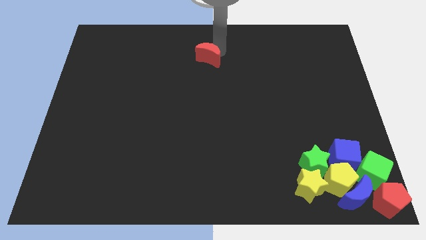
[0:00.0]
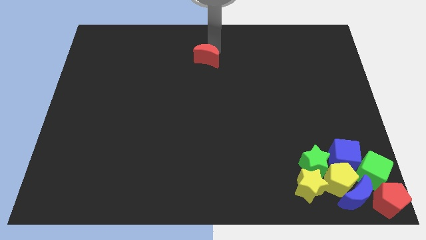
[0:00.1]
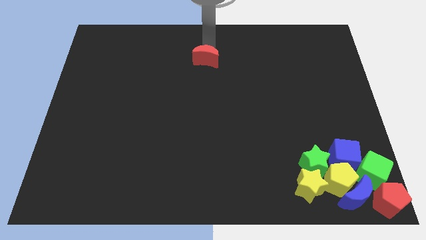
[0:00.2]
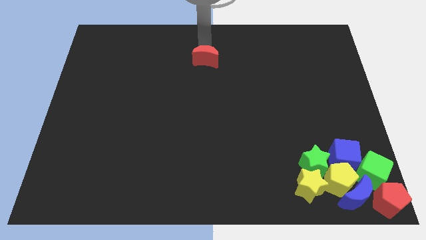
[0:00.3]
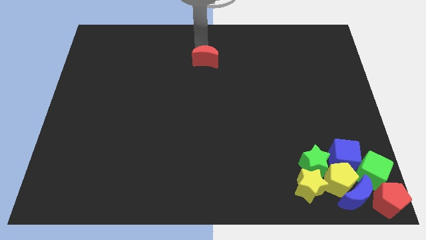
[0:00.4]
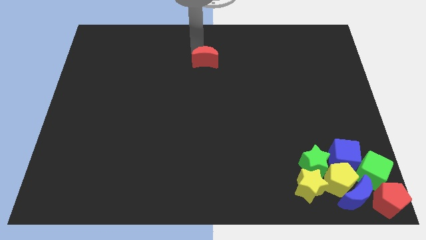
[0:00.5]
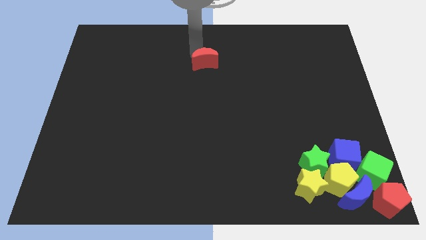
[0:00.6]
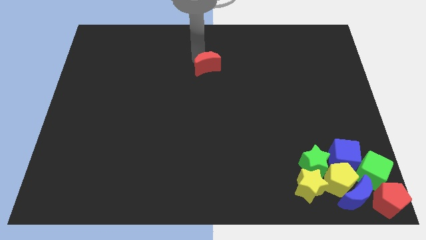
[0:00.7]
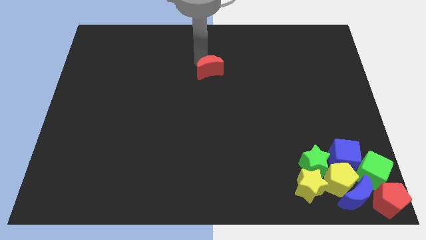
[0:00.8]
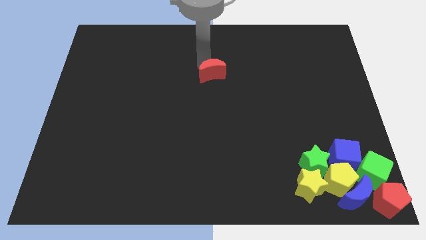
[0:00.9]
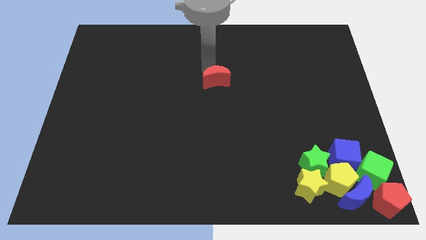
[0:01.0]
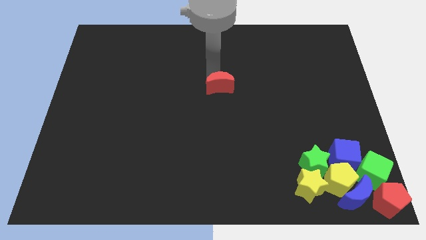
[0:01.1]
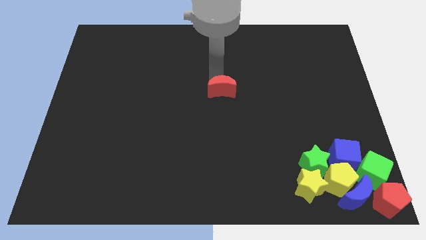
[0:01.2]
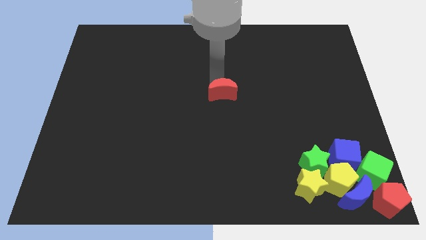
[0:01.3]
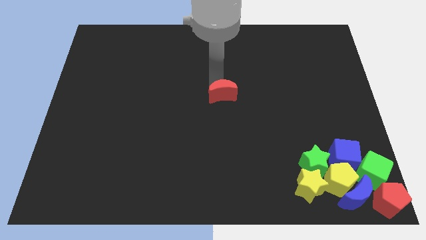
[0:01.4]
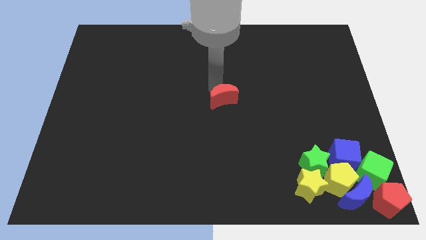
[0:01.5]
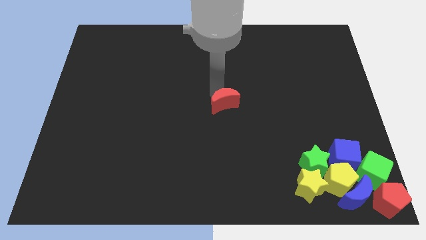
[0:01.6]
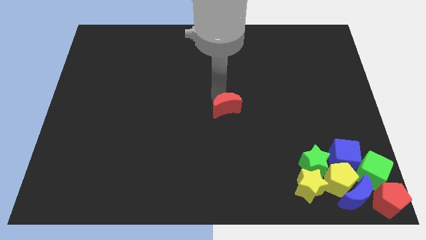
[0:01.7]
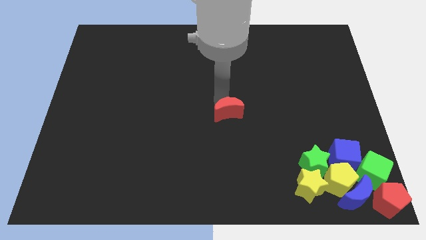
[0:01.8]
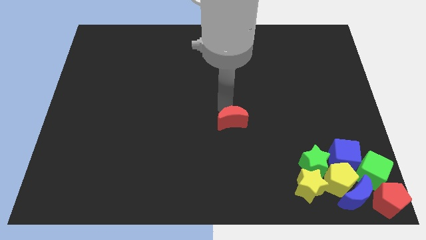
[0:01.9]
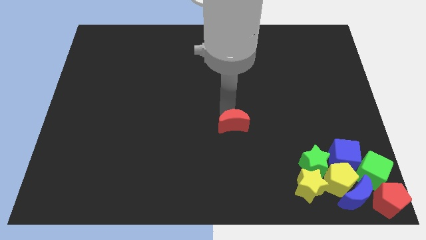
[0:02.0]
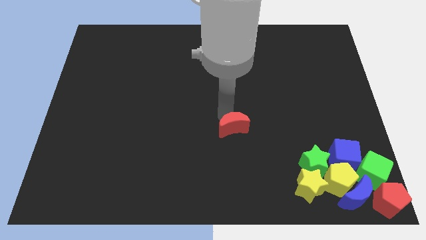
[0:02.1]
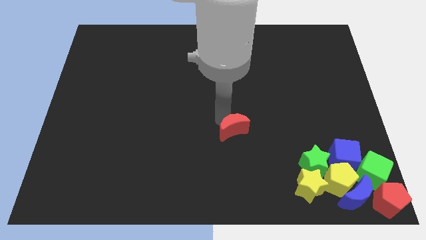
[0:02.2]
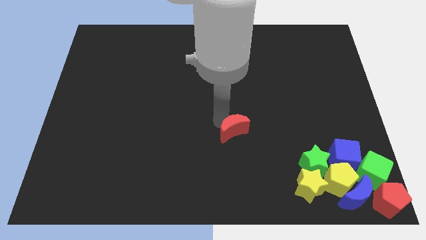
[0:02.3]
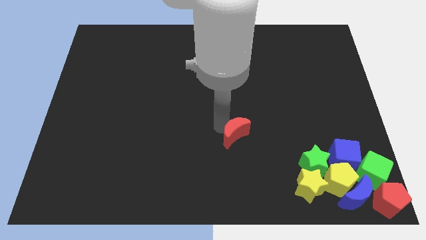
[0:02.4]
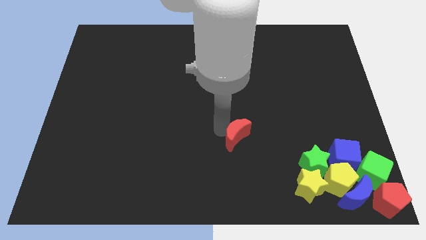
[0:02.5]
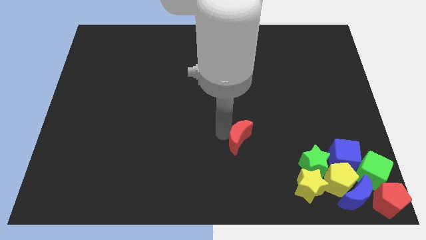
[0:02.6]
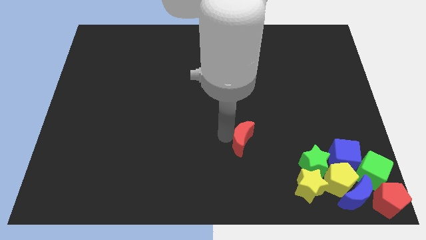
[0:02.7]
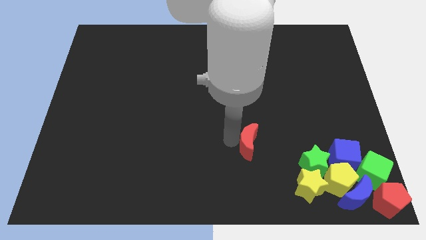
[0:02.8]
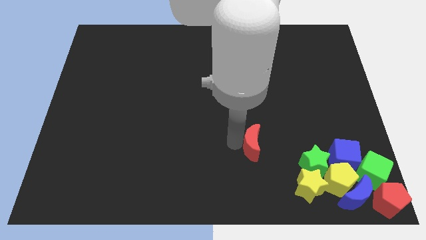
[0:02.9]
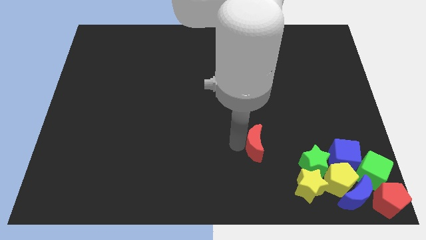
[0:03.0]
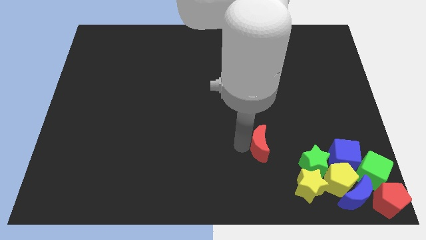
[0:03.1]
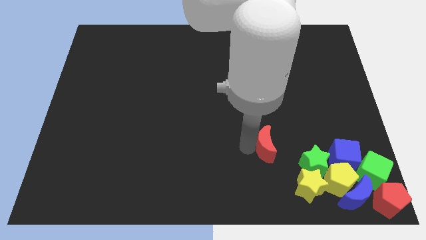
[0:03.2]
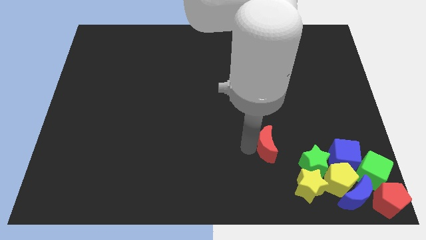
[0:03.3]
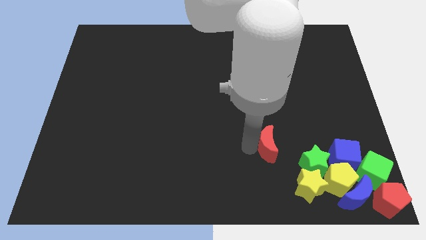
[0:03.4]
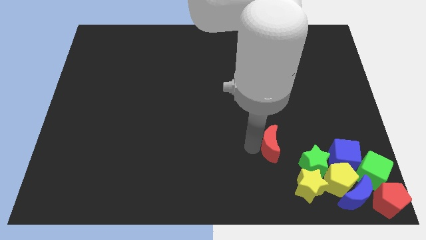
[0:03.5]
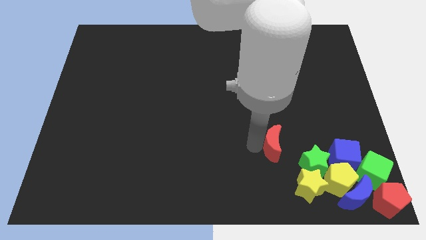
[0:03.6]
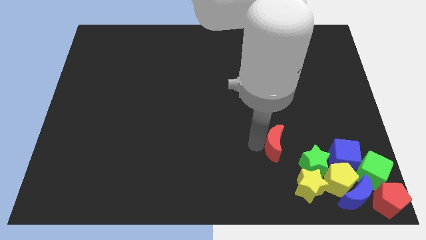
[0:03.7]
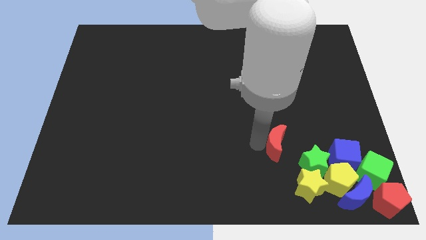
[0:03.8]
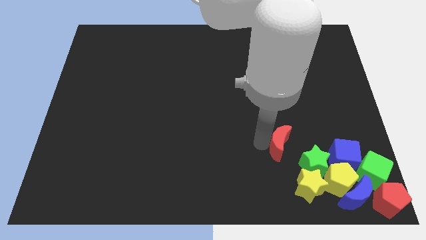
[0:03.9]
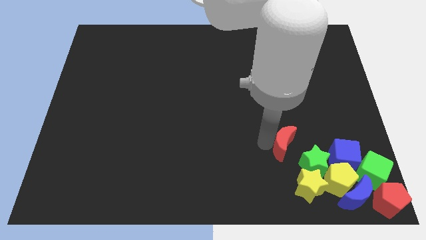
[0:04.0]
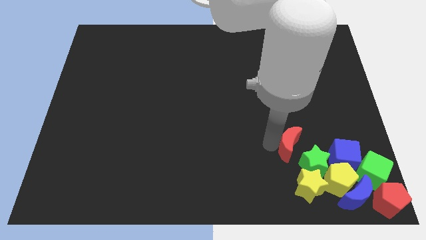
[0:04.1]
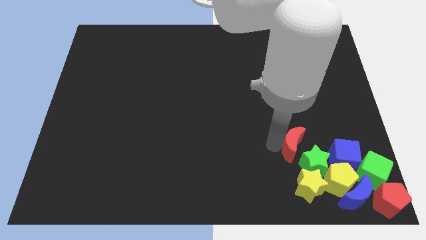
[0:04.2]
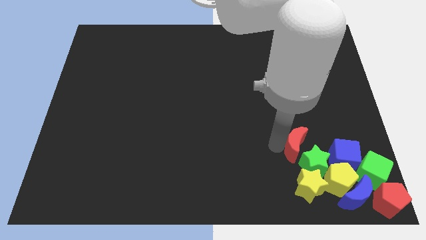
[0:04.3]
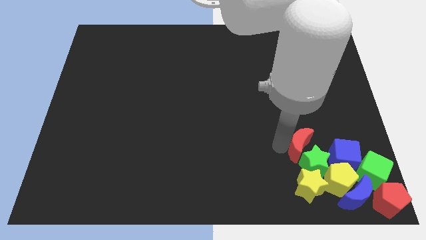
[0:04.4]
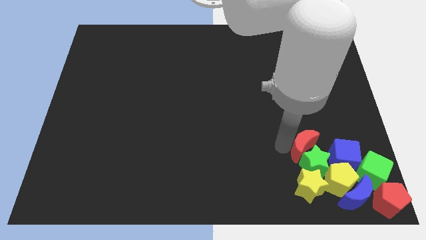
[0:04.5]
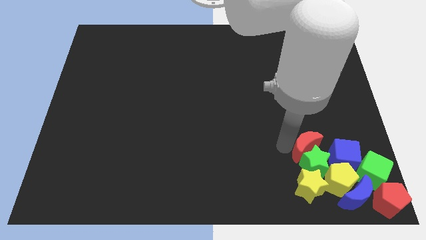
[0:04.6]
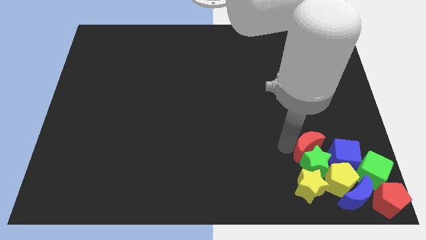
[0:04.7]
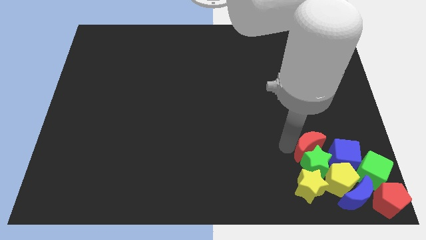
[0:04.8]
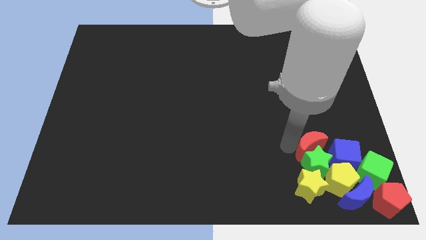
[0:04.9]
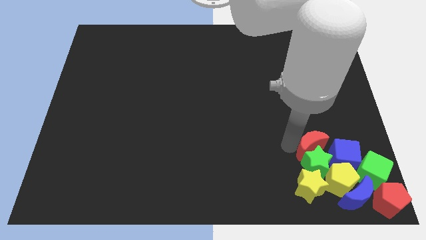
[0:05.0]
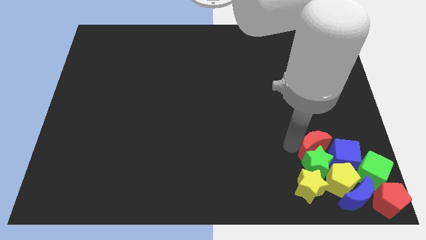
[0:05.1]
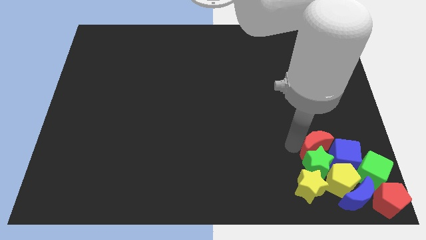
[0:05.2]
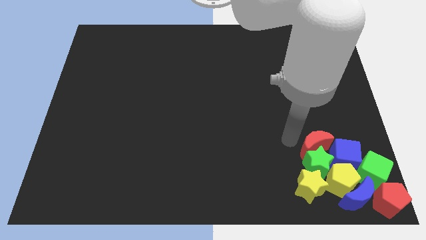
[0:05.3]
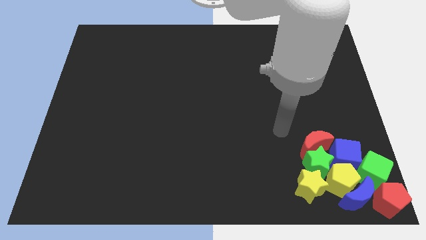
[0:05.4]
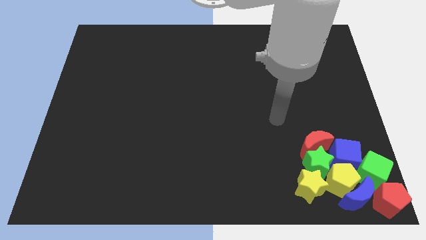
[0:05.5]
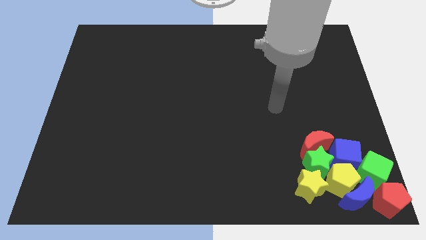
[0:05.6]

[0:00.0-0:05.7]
move the red crescent towards the top of the green star

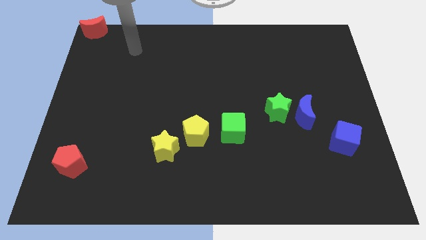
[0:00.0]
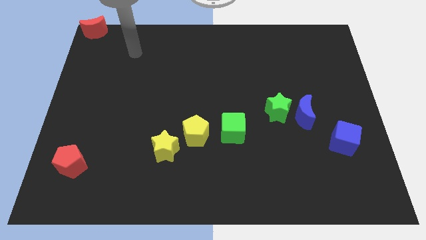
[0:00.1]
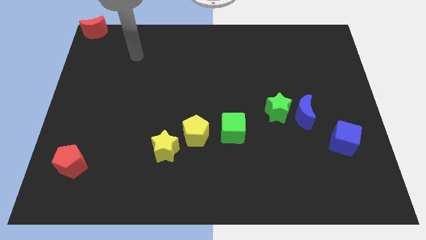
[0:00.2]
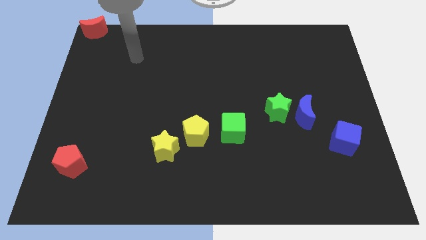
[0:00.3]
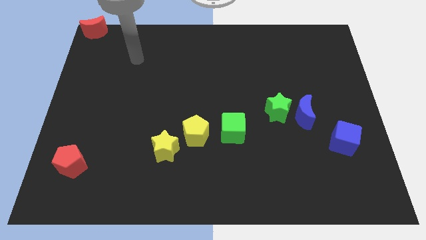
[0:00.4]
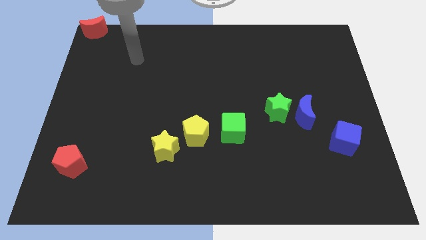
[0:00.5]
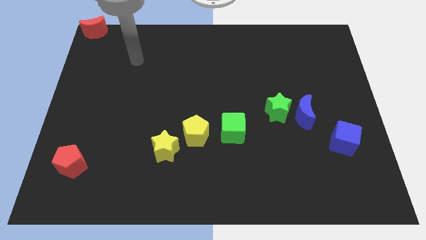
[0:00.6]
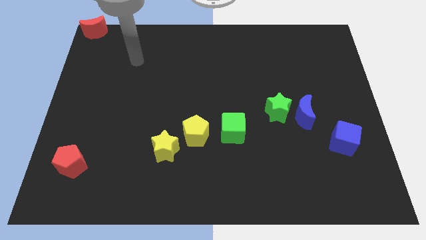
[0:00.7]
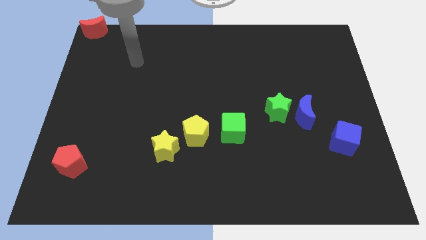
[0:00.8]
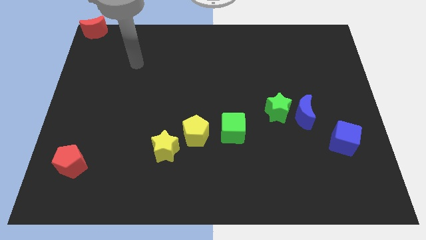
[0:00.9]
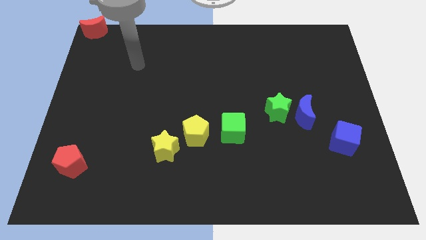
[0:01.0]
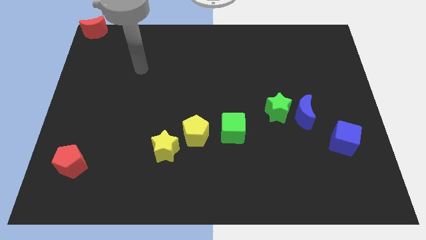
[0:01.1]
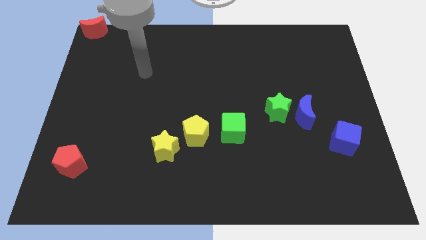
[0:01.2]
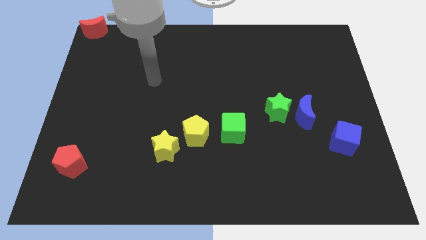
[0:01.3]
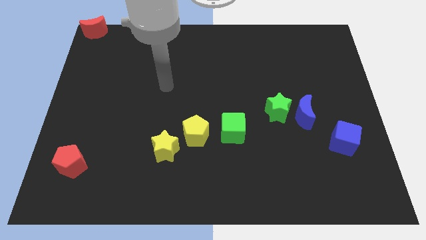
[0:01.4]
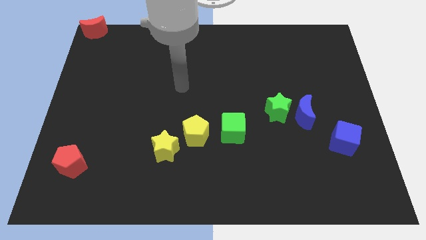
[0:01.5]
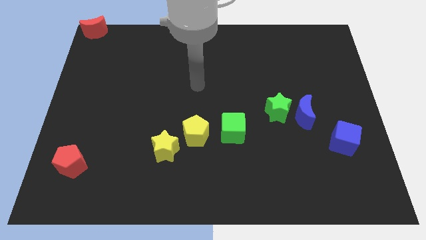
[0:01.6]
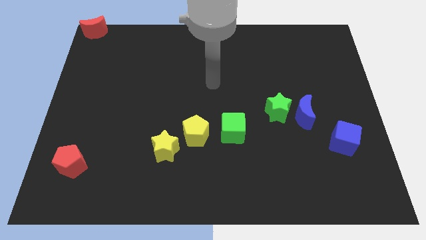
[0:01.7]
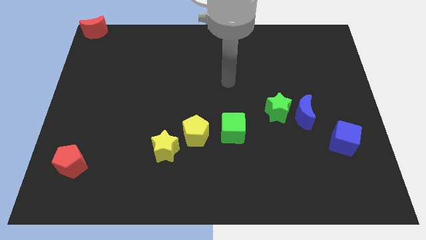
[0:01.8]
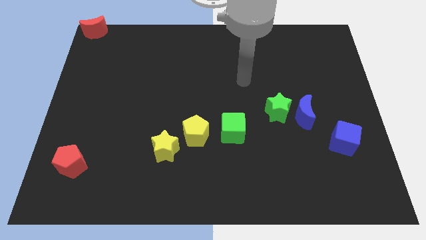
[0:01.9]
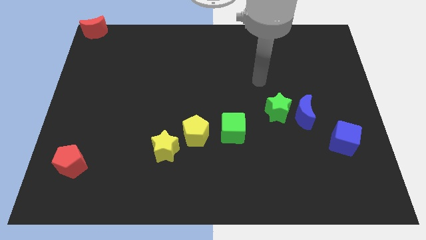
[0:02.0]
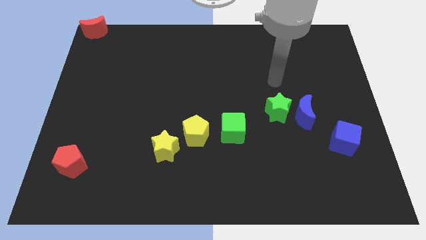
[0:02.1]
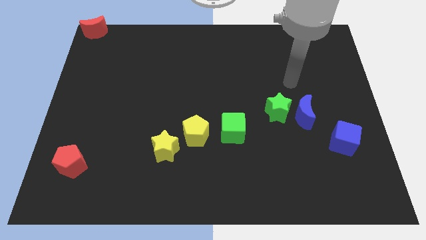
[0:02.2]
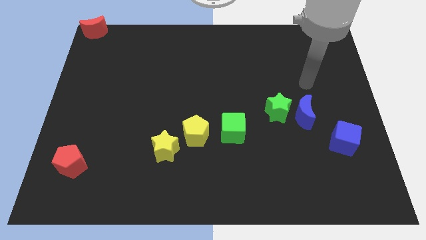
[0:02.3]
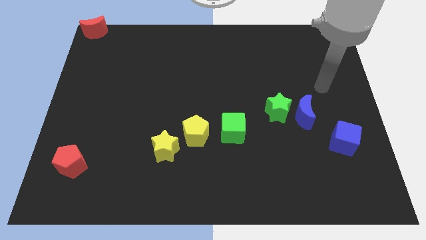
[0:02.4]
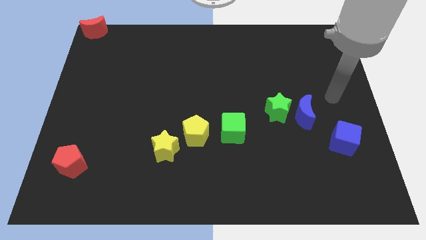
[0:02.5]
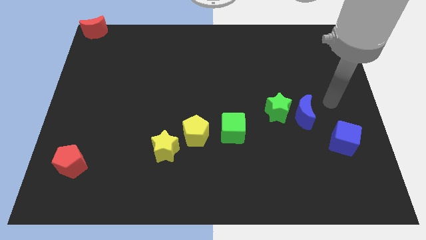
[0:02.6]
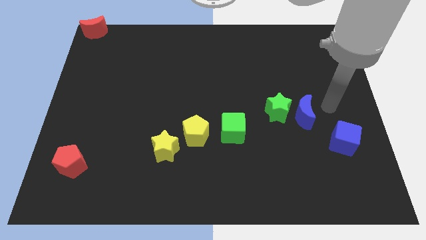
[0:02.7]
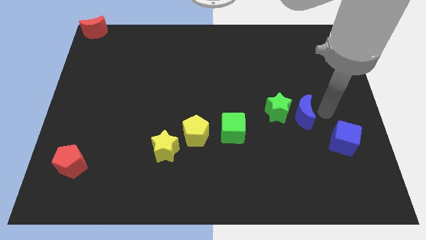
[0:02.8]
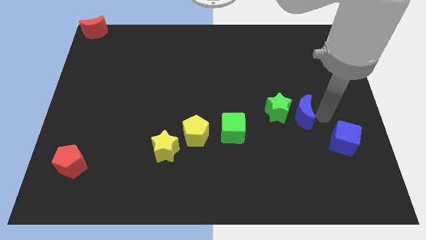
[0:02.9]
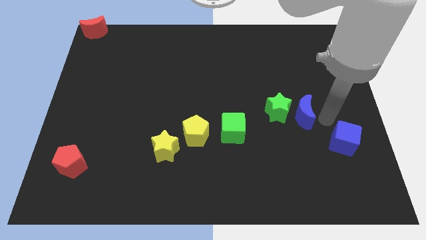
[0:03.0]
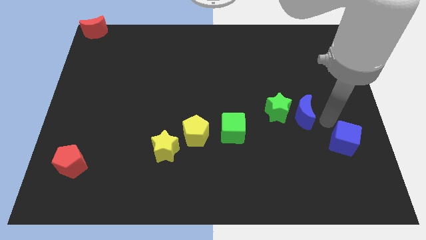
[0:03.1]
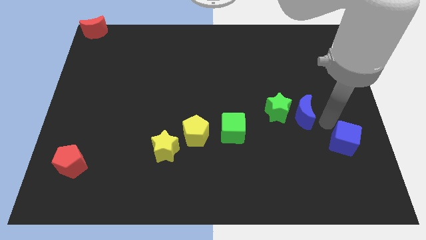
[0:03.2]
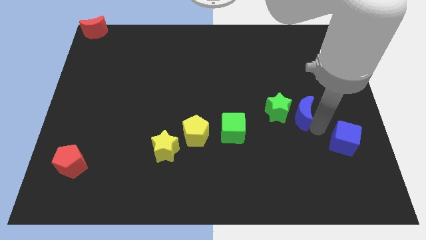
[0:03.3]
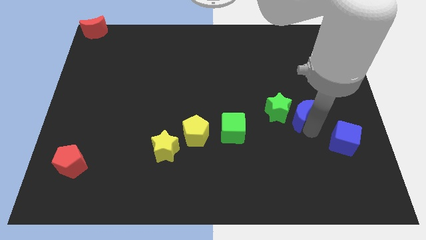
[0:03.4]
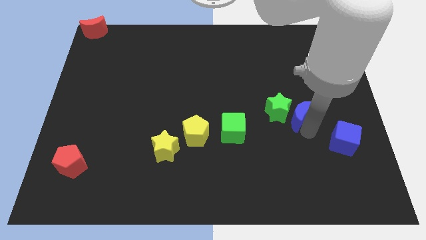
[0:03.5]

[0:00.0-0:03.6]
move arm near blue moon
